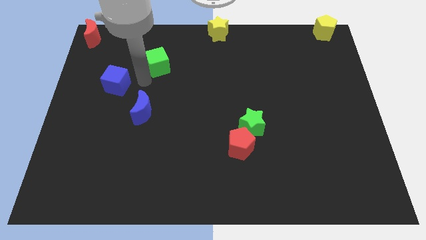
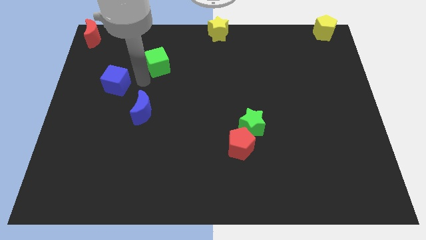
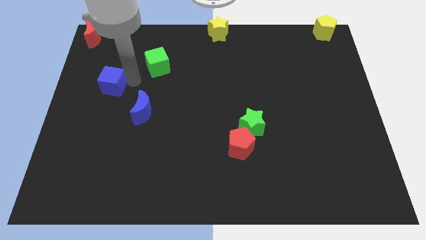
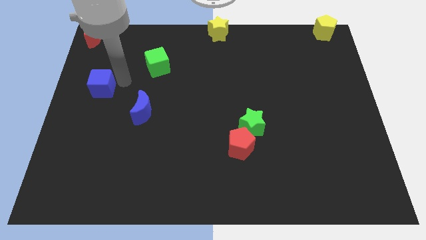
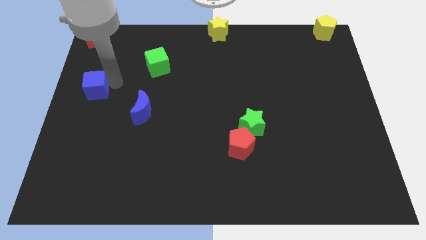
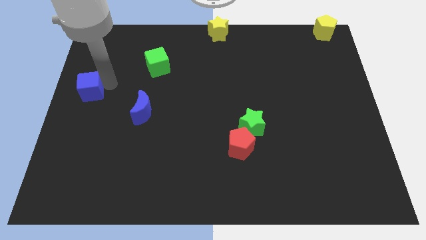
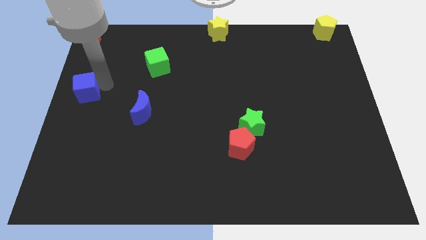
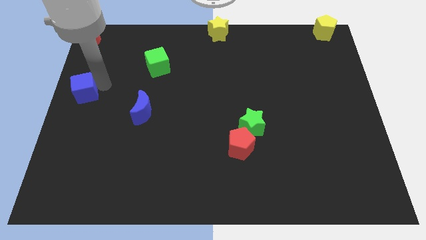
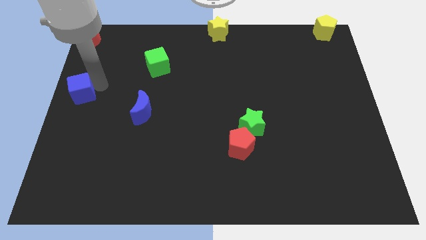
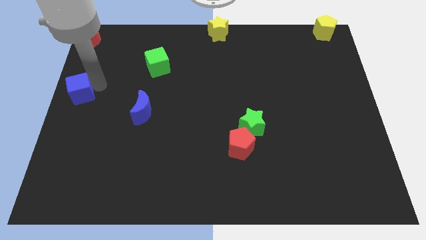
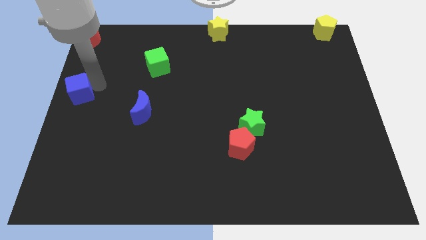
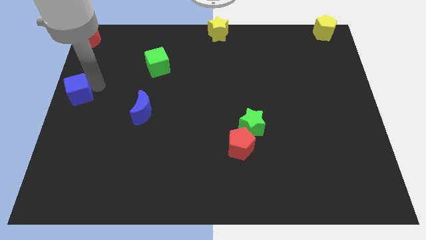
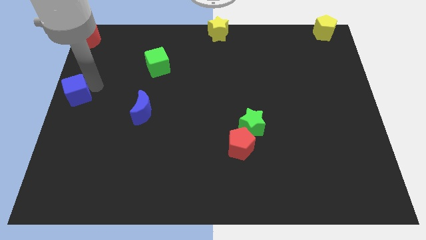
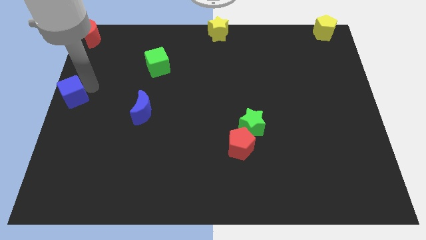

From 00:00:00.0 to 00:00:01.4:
push blue cube to the left center of the board

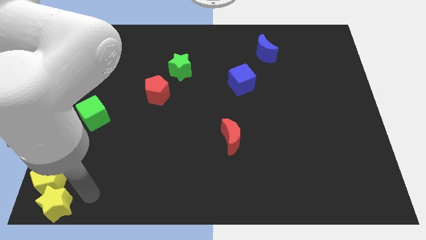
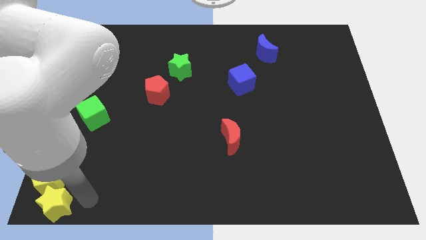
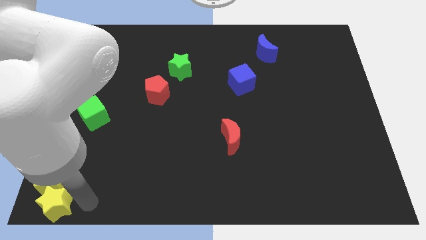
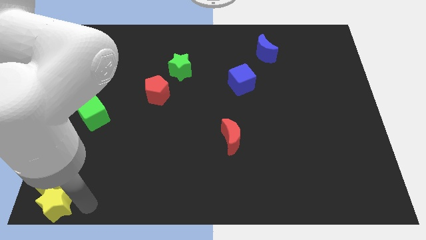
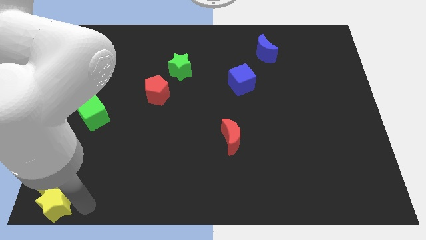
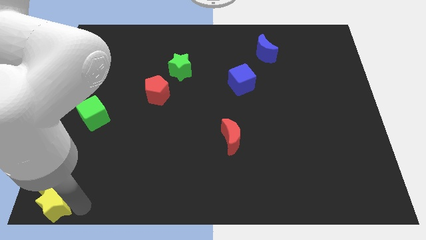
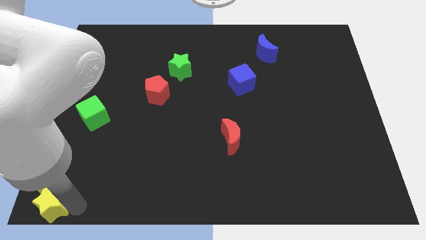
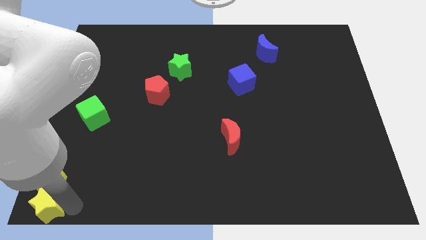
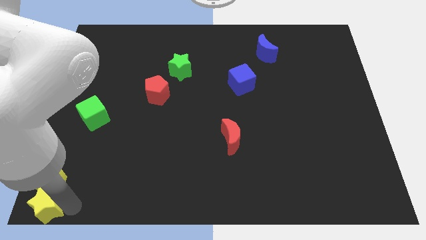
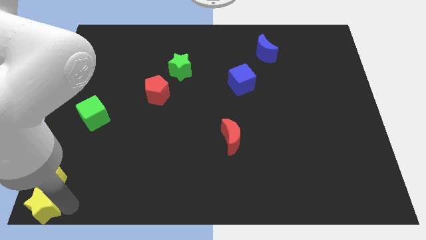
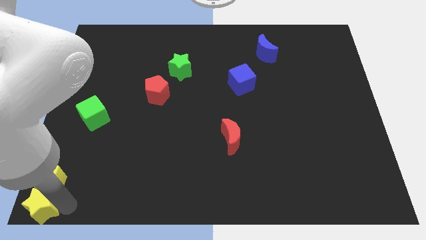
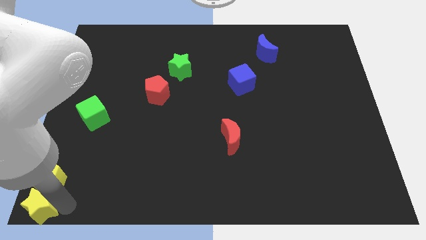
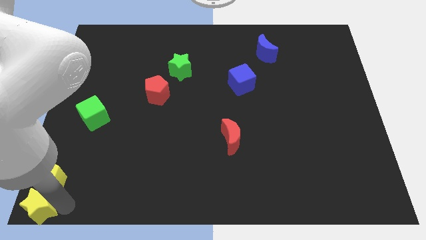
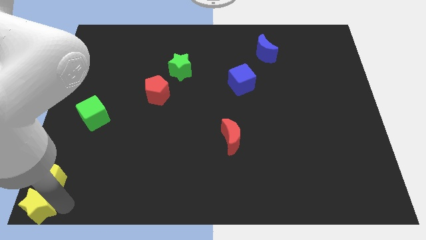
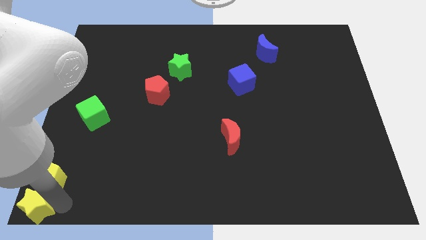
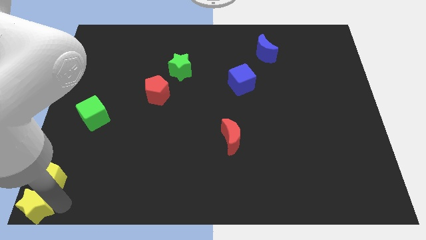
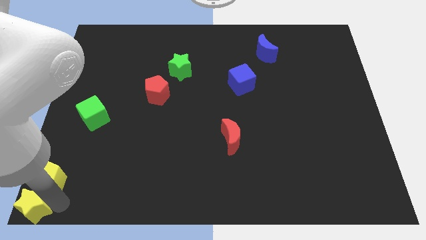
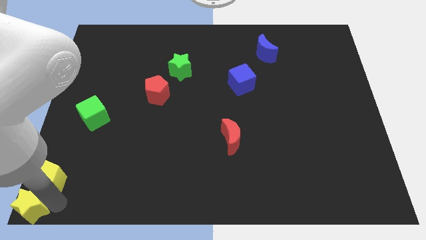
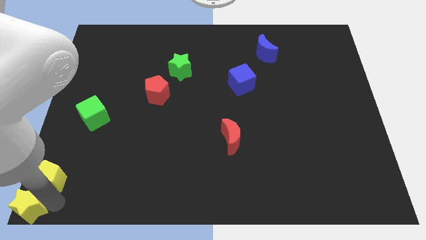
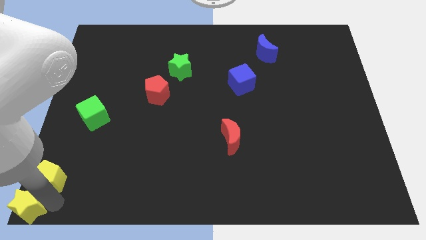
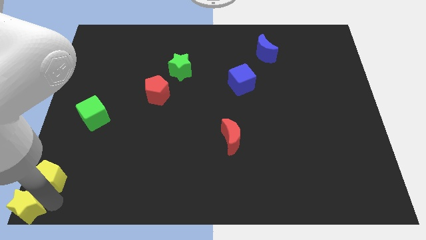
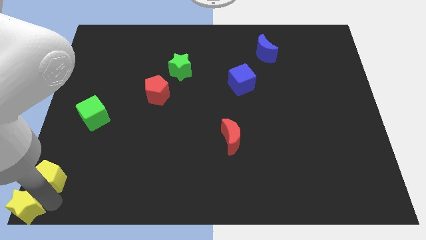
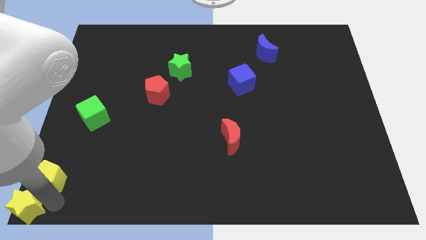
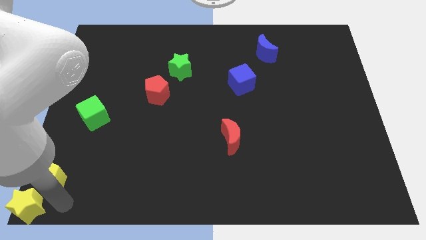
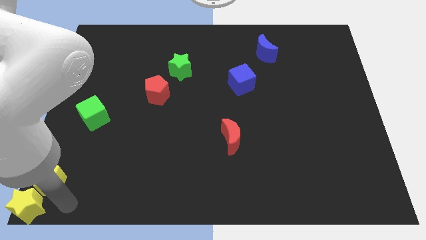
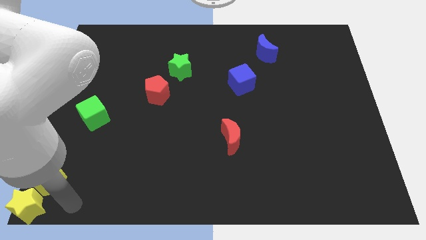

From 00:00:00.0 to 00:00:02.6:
move the yellow star to the bottom left corner

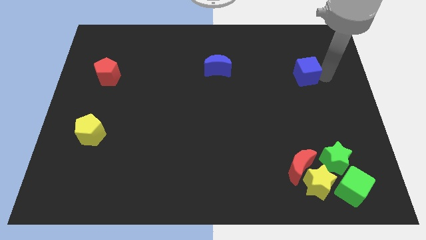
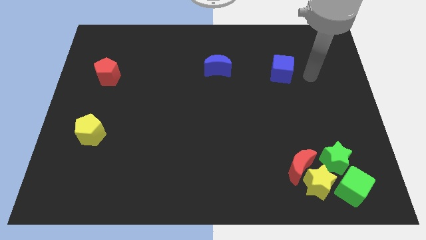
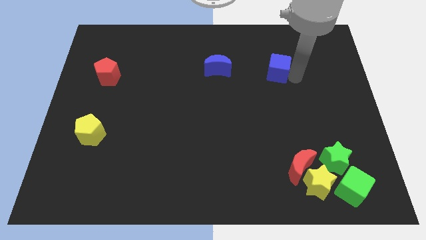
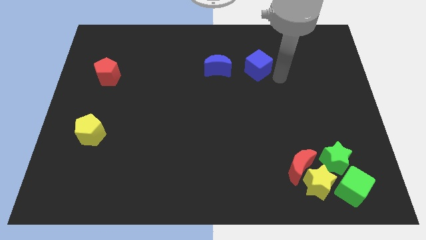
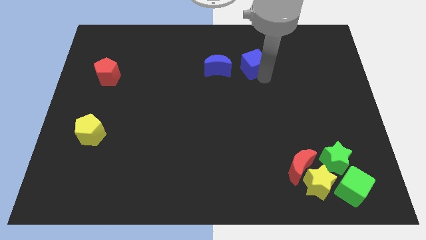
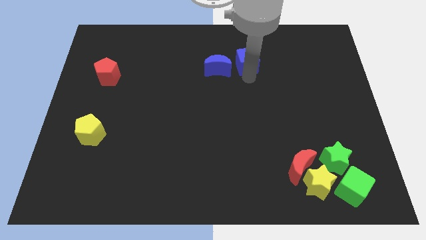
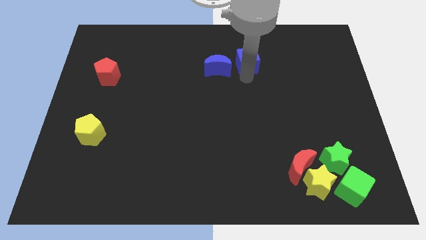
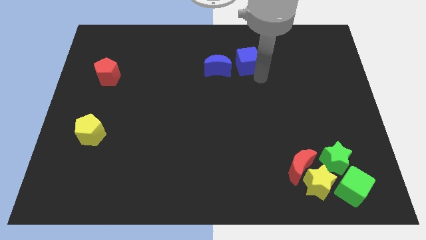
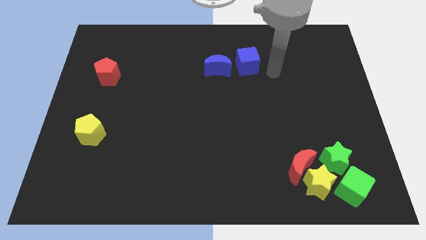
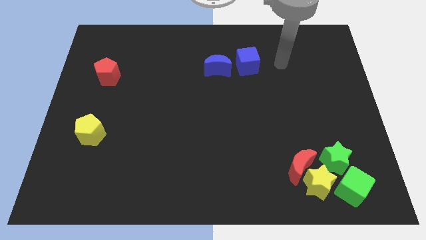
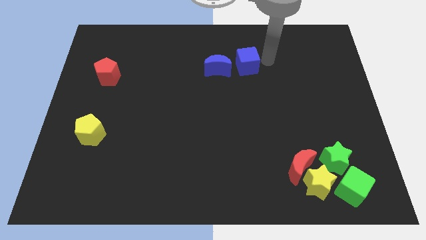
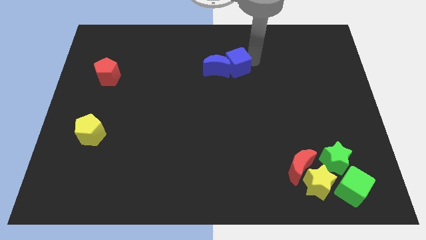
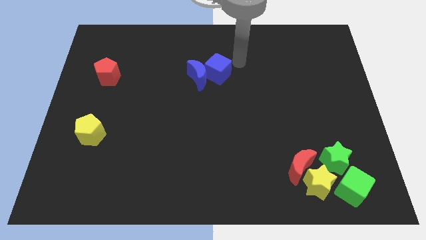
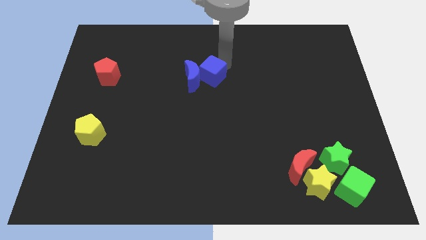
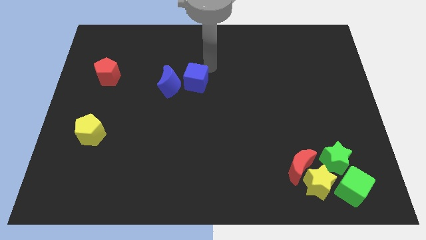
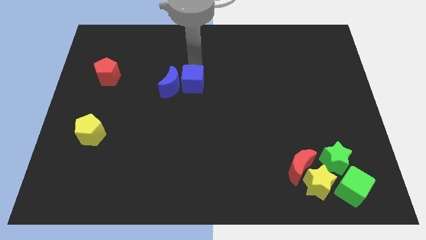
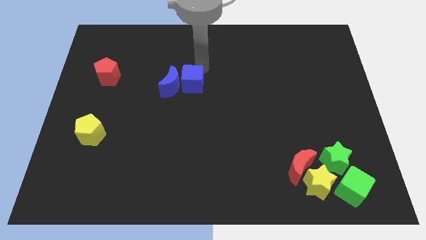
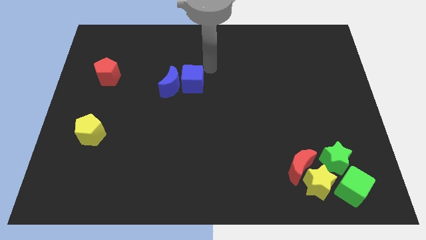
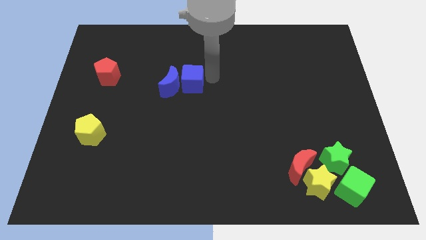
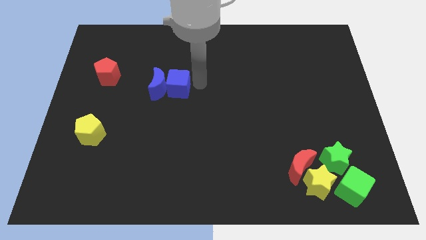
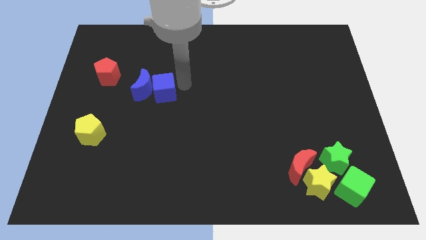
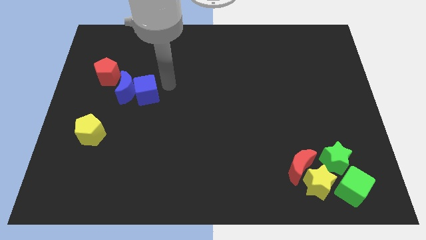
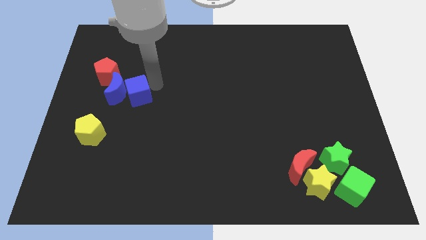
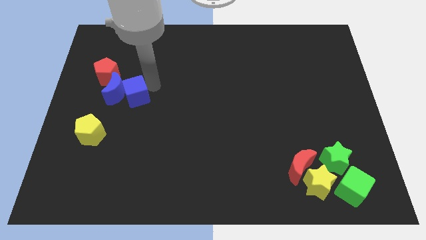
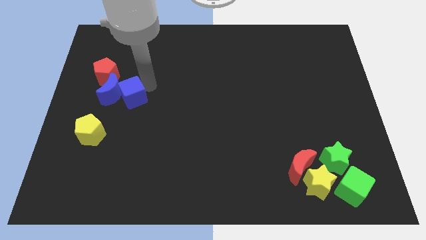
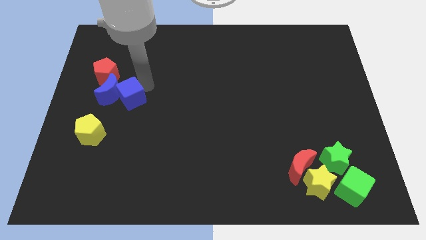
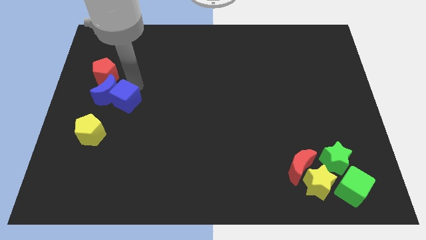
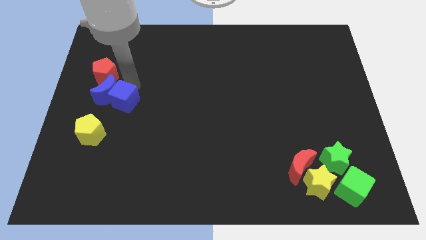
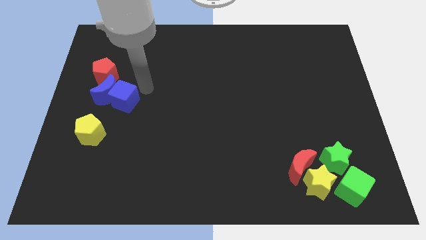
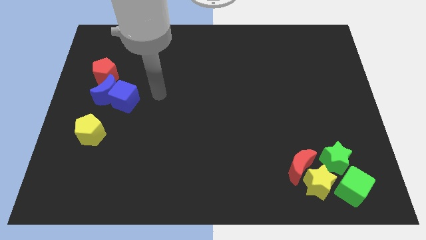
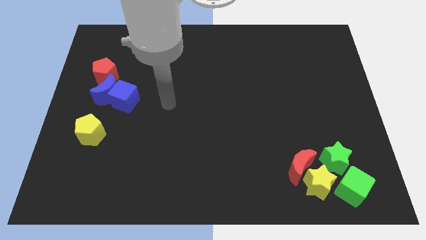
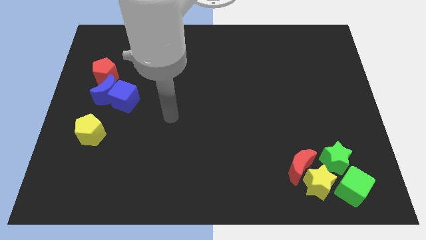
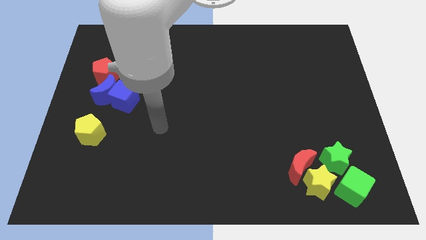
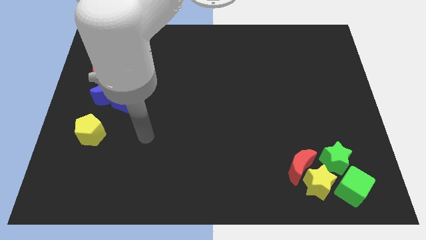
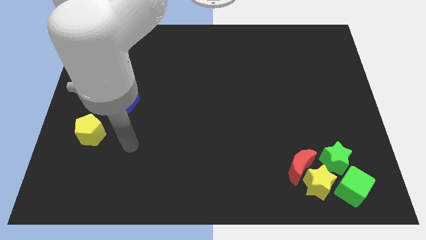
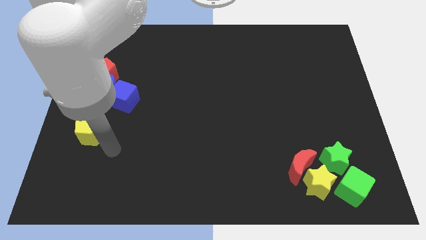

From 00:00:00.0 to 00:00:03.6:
push the blue crescent along with the blue cube to the bottom of the red pentagon

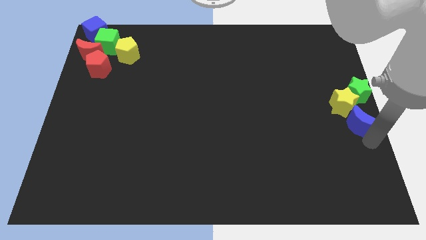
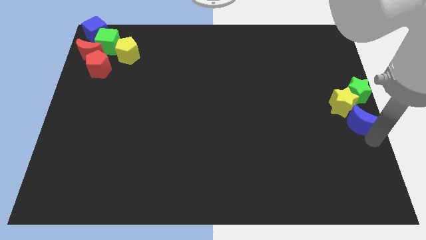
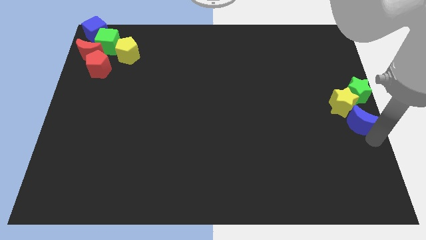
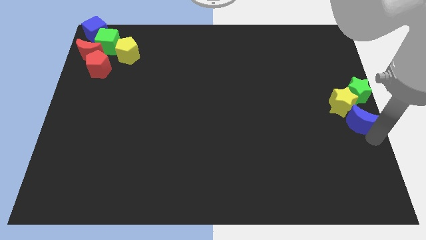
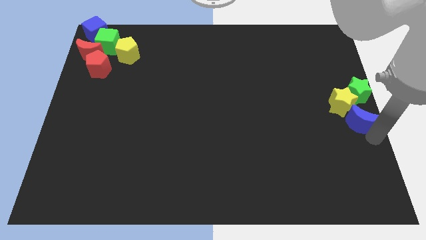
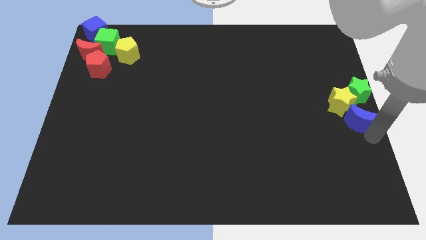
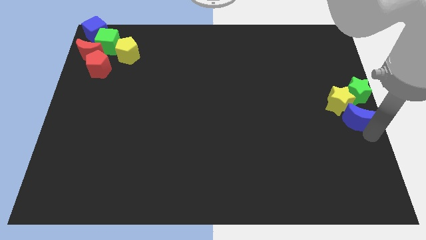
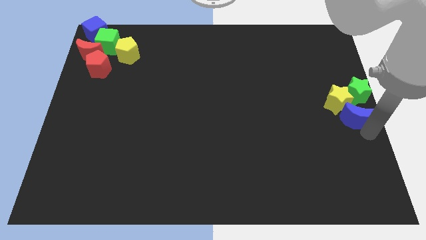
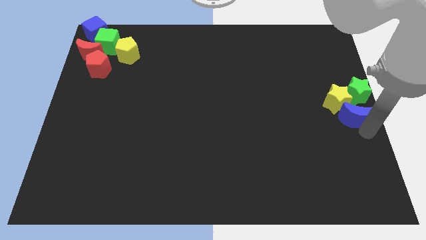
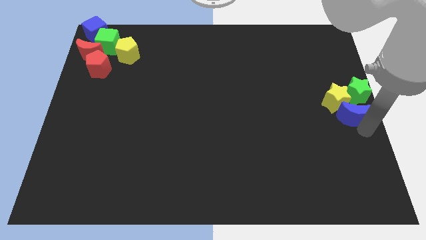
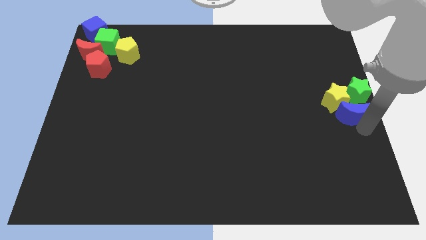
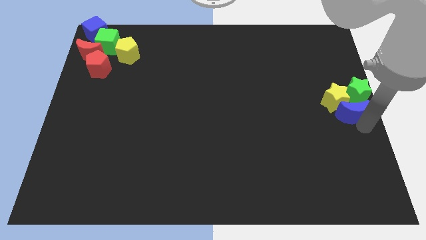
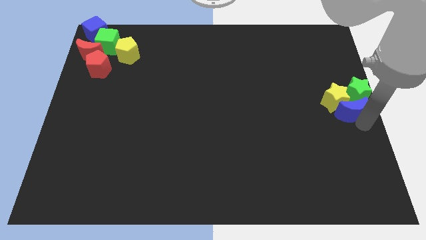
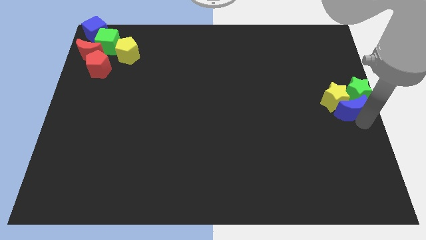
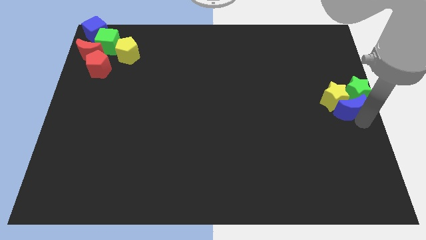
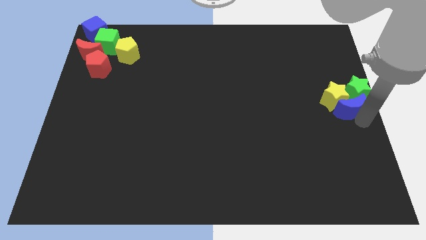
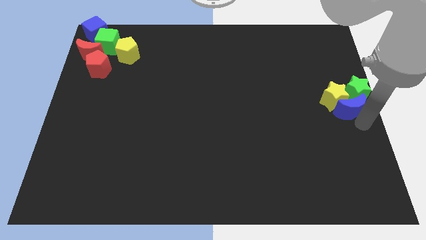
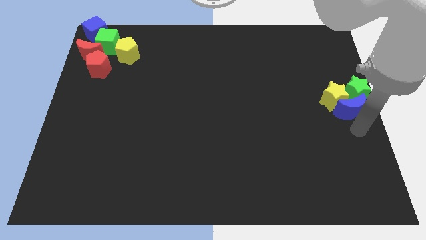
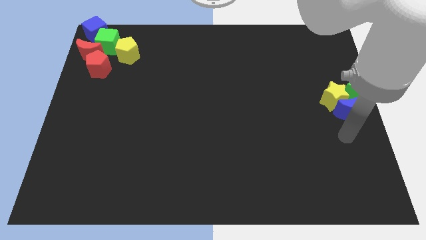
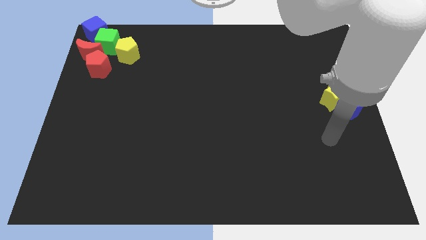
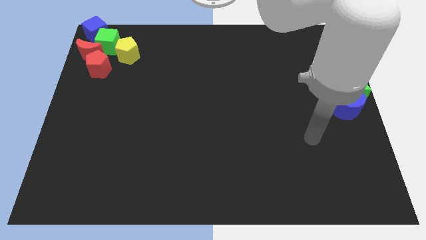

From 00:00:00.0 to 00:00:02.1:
move blue cube into the green star and yellow star
